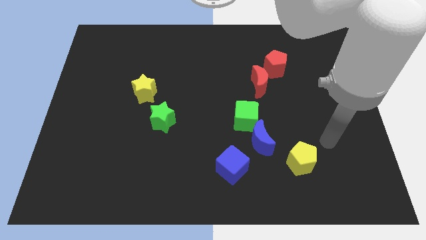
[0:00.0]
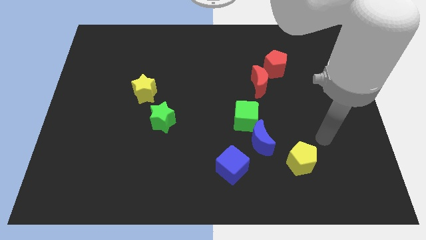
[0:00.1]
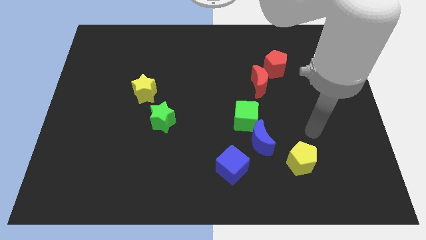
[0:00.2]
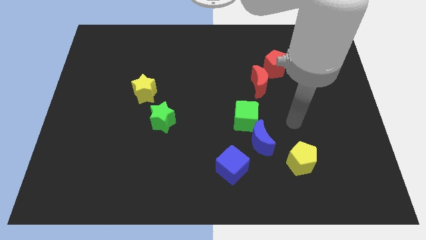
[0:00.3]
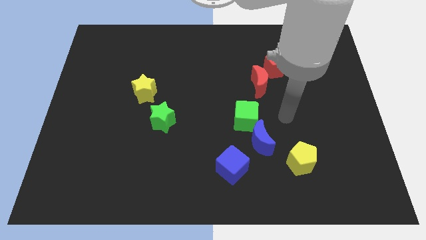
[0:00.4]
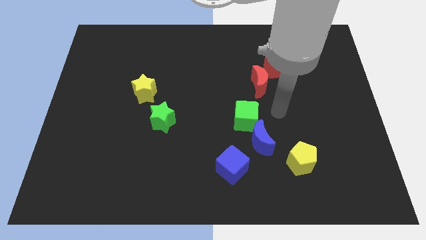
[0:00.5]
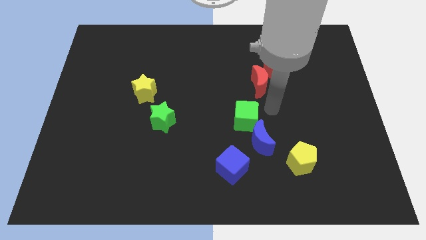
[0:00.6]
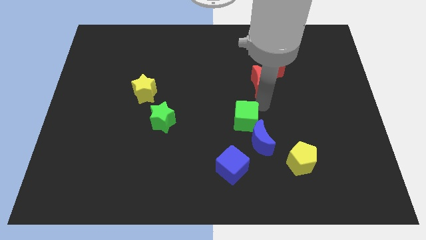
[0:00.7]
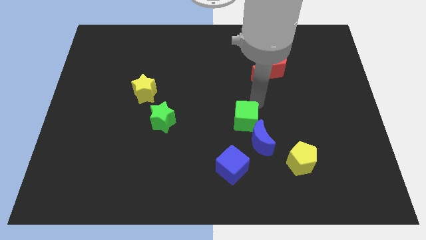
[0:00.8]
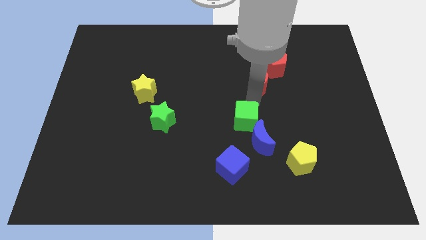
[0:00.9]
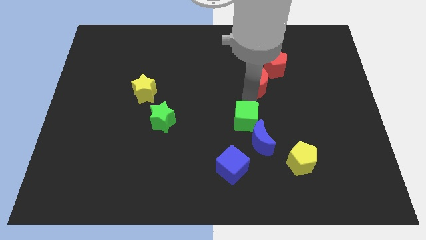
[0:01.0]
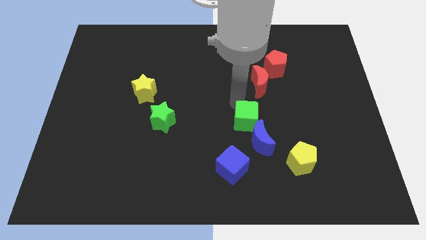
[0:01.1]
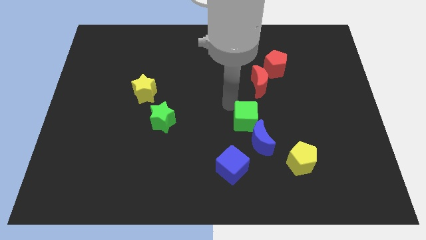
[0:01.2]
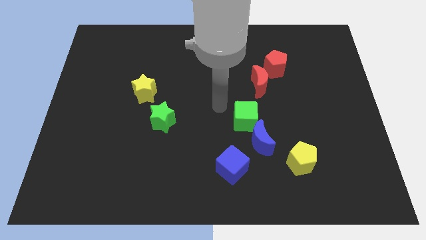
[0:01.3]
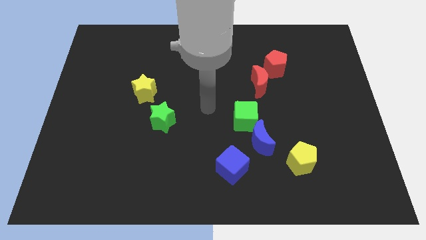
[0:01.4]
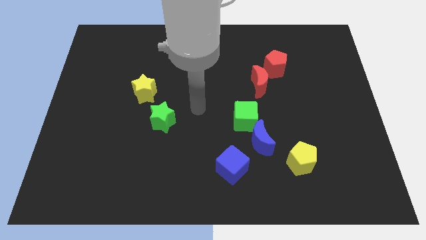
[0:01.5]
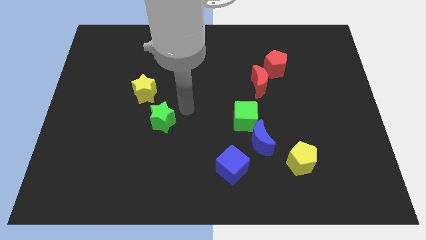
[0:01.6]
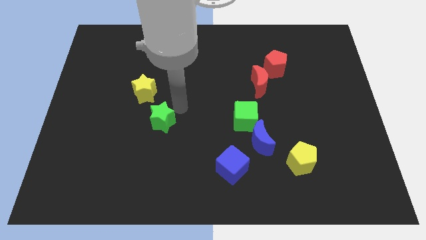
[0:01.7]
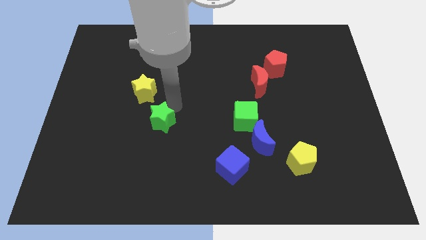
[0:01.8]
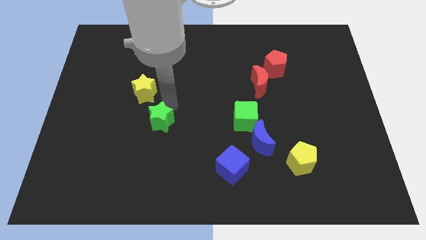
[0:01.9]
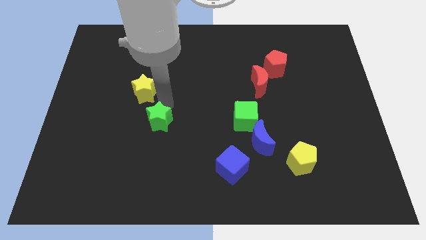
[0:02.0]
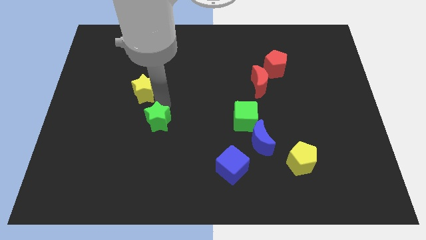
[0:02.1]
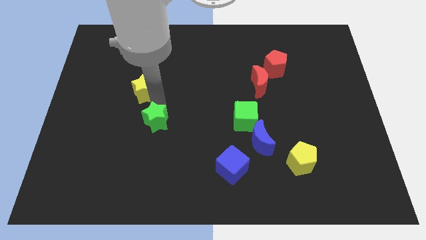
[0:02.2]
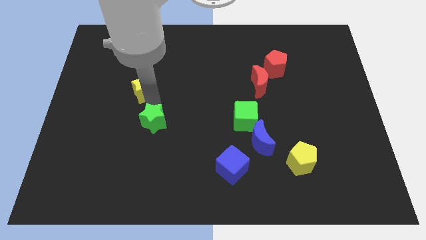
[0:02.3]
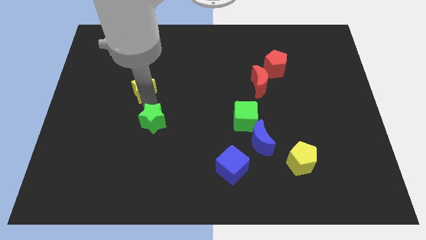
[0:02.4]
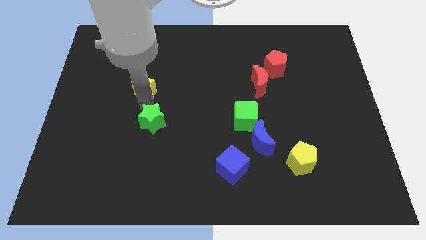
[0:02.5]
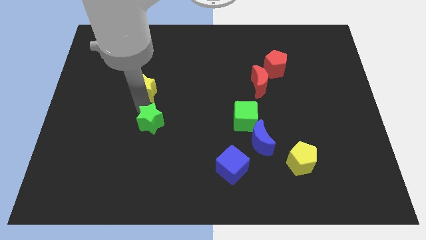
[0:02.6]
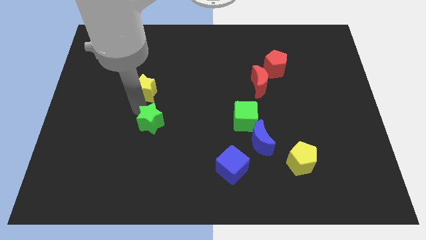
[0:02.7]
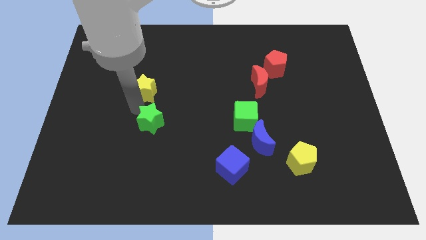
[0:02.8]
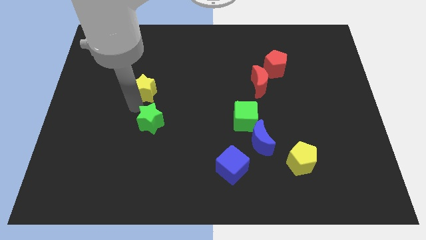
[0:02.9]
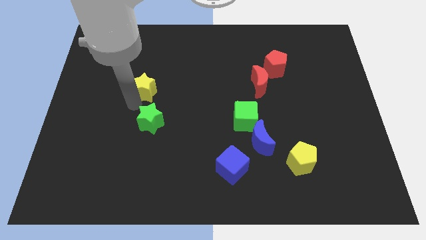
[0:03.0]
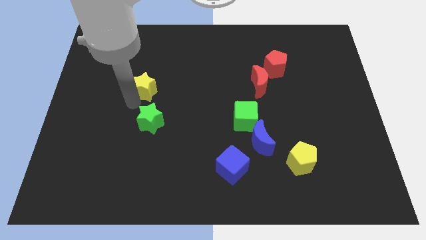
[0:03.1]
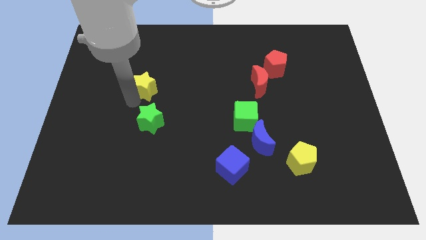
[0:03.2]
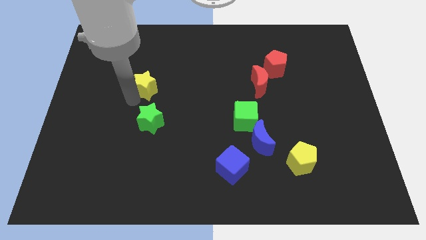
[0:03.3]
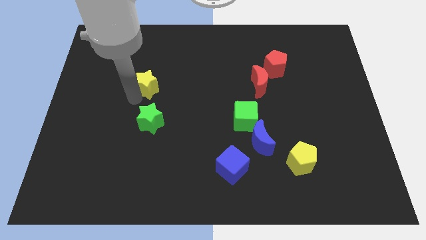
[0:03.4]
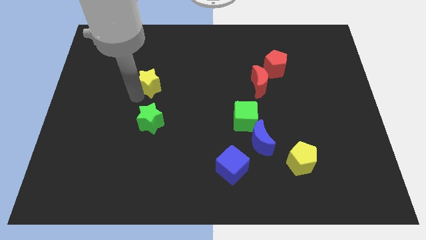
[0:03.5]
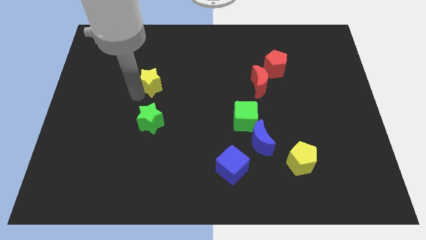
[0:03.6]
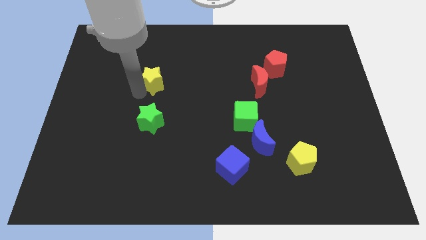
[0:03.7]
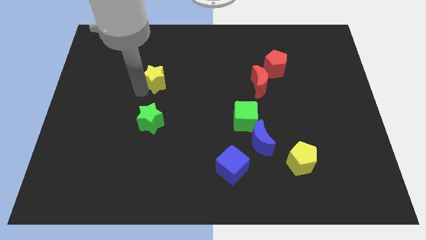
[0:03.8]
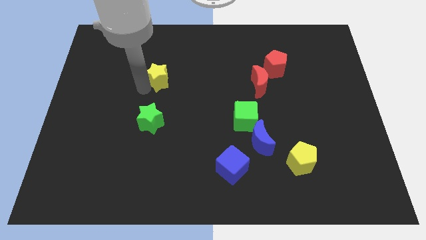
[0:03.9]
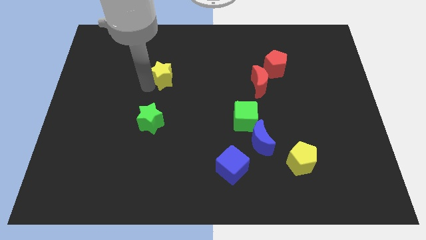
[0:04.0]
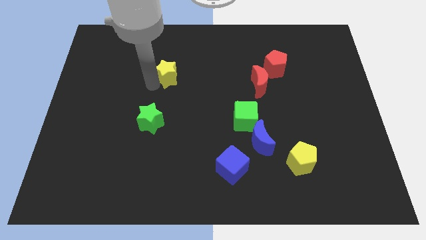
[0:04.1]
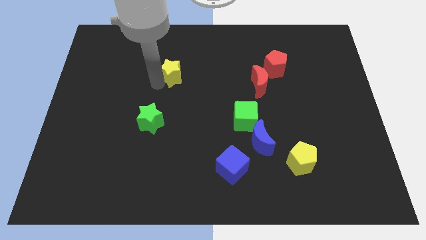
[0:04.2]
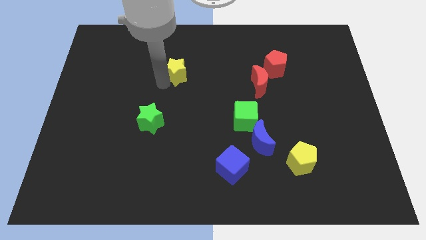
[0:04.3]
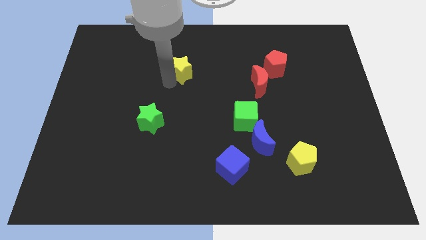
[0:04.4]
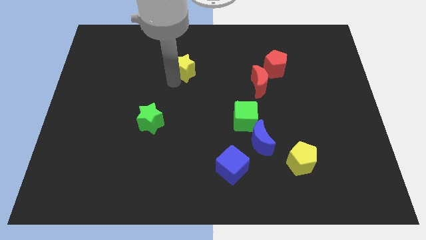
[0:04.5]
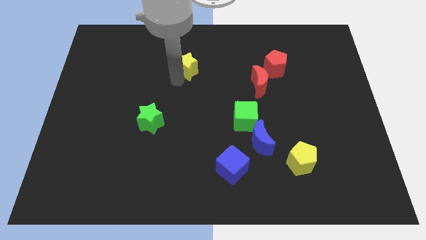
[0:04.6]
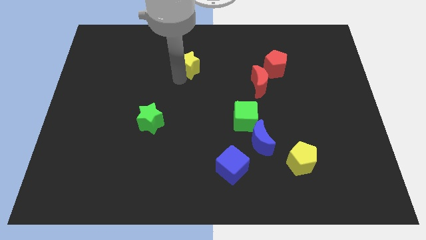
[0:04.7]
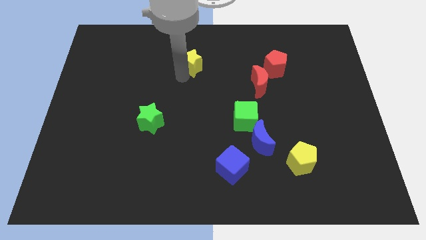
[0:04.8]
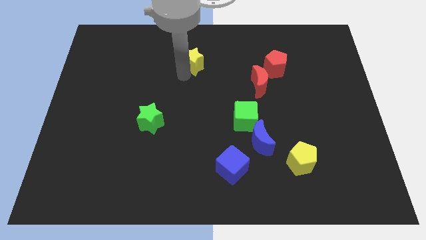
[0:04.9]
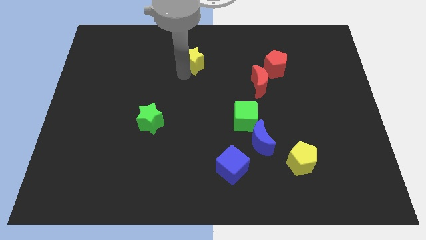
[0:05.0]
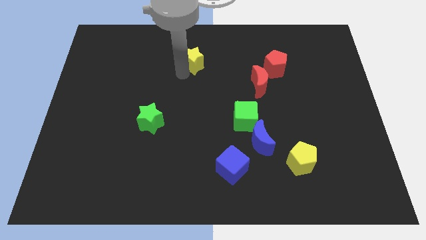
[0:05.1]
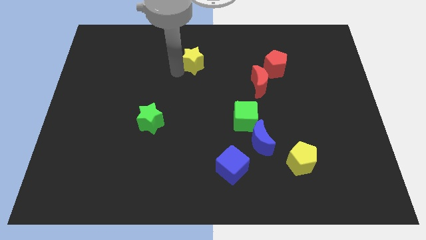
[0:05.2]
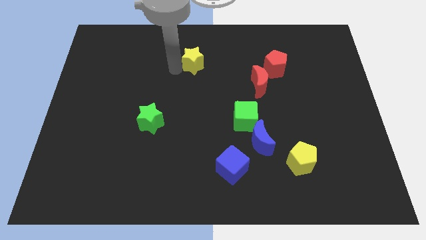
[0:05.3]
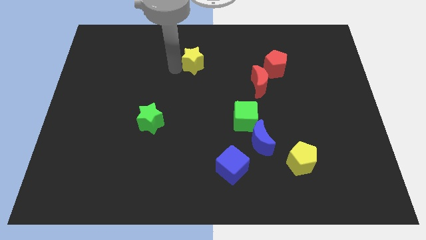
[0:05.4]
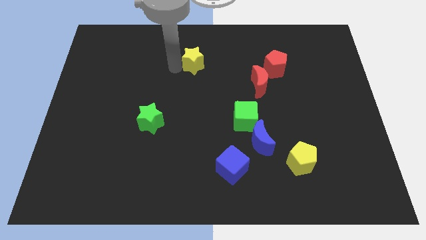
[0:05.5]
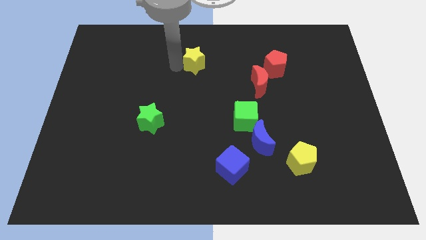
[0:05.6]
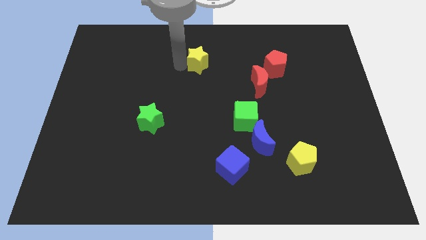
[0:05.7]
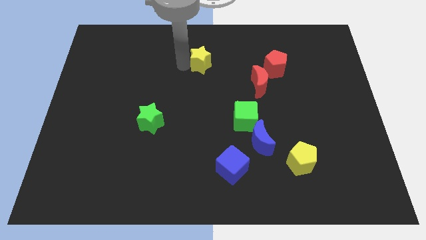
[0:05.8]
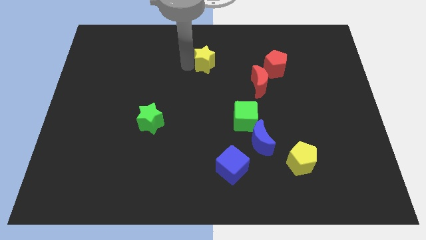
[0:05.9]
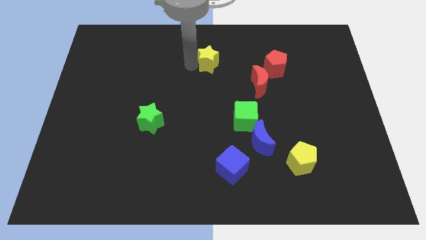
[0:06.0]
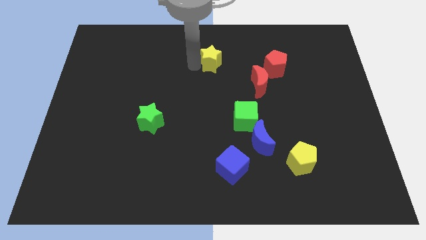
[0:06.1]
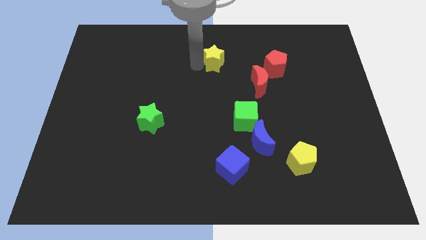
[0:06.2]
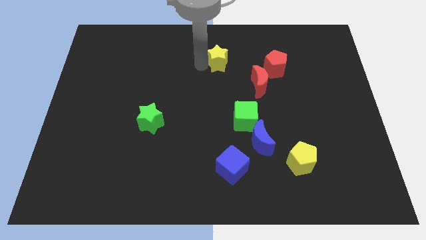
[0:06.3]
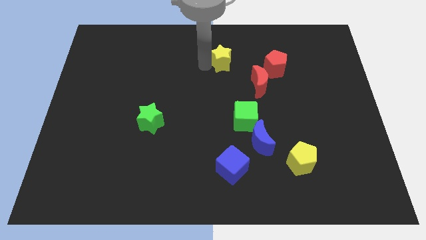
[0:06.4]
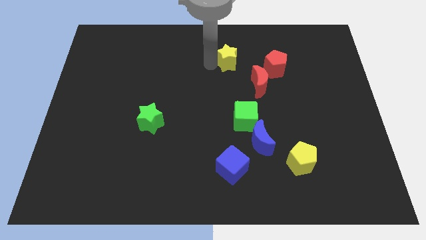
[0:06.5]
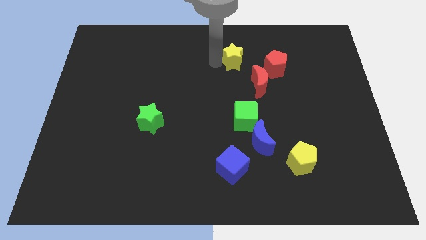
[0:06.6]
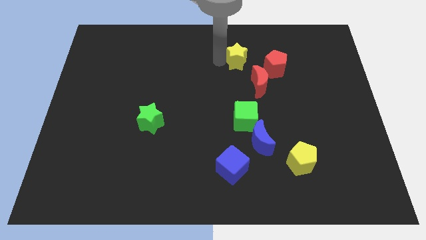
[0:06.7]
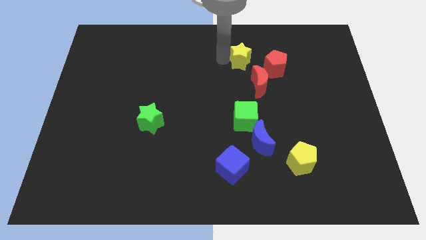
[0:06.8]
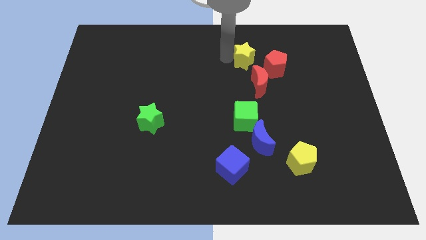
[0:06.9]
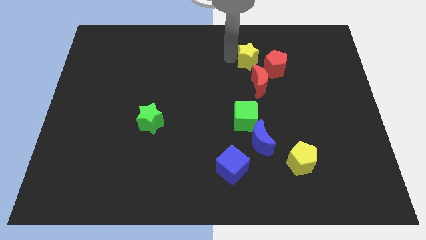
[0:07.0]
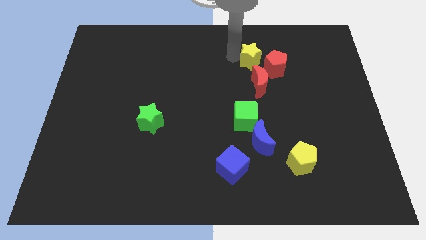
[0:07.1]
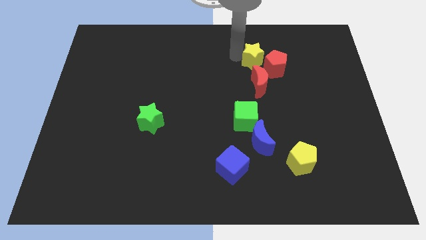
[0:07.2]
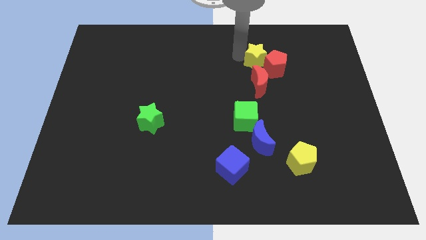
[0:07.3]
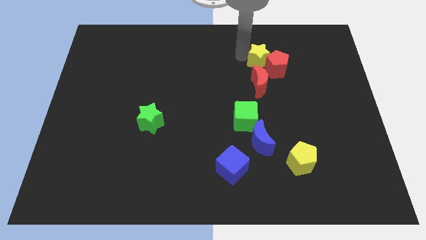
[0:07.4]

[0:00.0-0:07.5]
move the yellow star close to the red pentagon

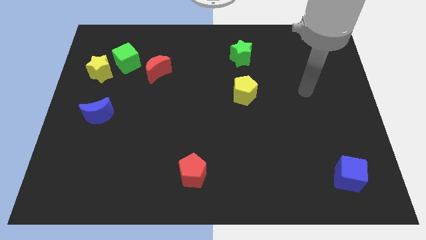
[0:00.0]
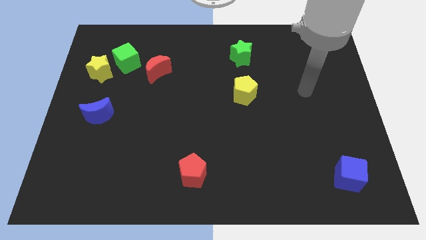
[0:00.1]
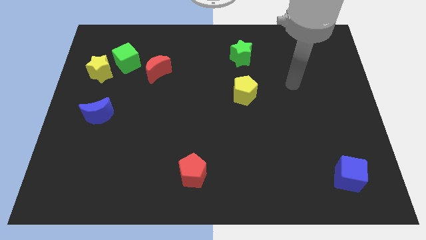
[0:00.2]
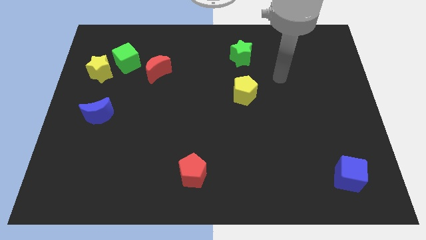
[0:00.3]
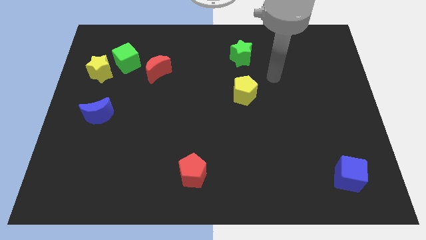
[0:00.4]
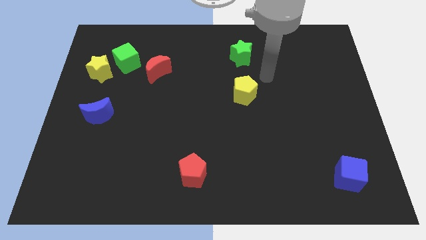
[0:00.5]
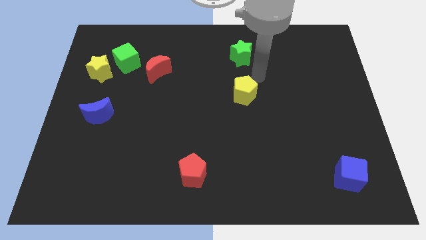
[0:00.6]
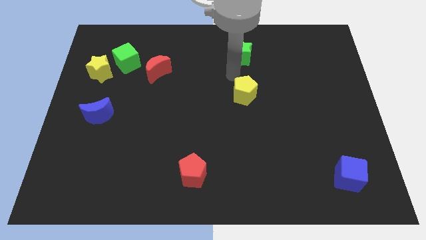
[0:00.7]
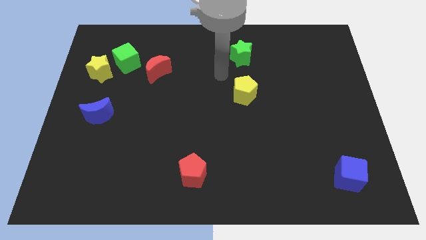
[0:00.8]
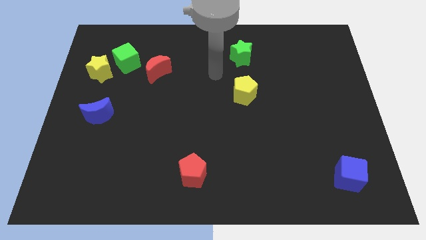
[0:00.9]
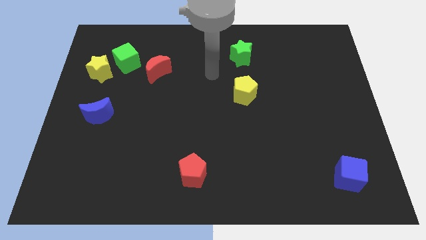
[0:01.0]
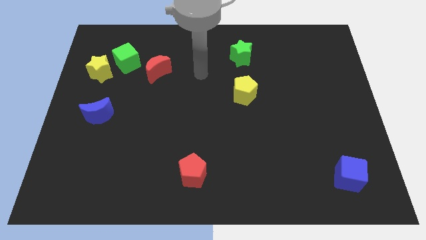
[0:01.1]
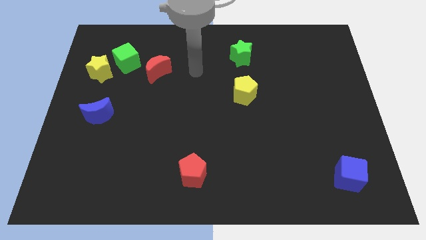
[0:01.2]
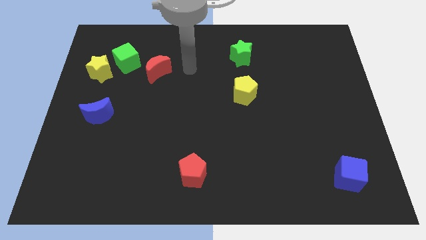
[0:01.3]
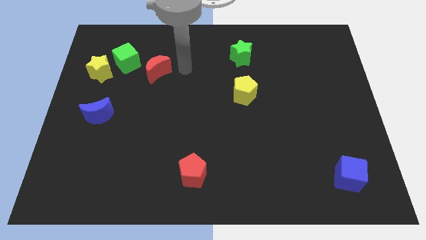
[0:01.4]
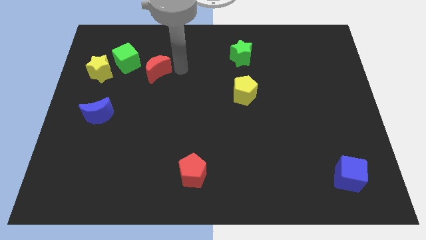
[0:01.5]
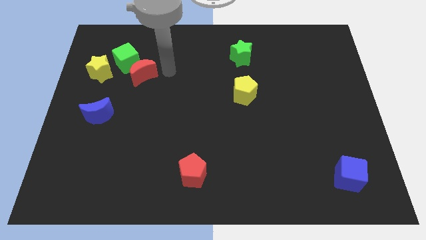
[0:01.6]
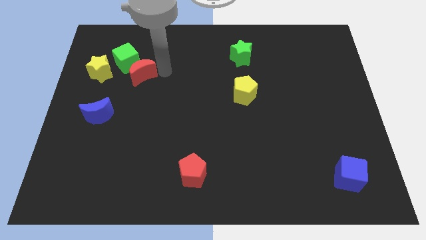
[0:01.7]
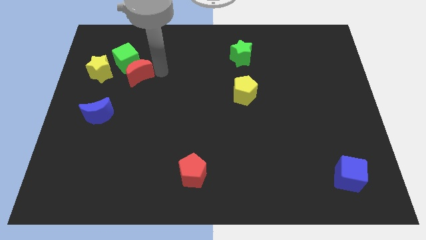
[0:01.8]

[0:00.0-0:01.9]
put the red moon next to the green cube
